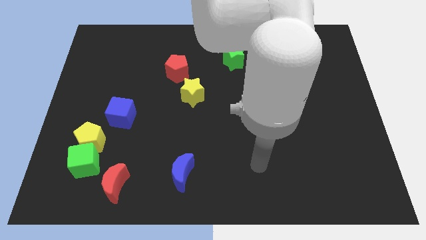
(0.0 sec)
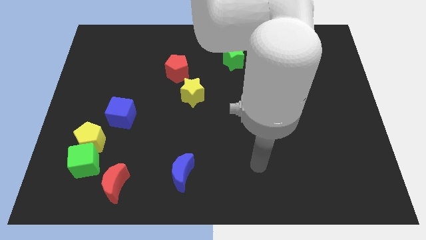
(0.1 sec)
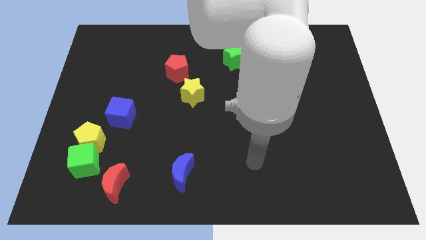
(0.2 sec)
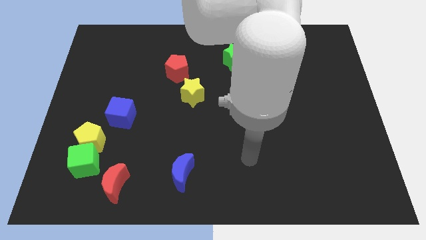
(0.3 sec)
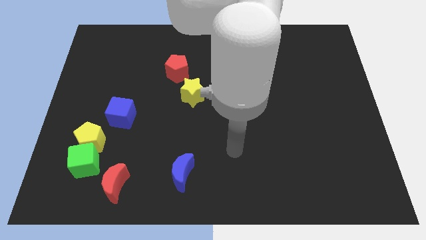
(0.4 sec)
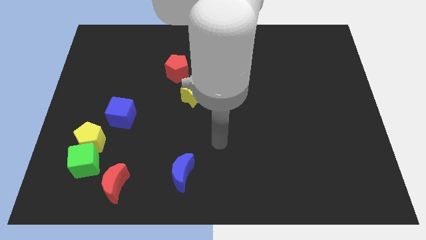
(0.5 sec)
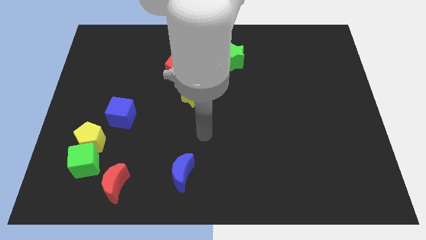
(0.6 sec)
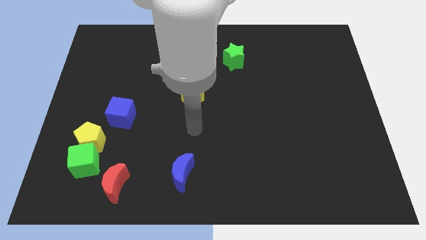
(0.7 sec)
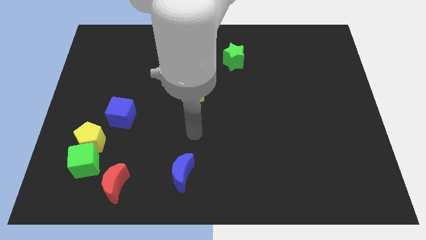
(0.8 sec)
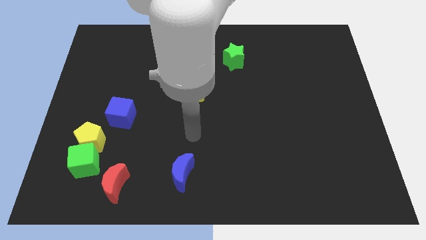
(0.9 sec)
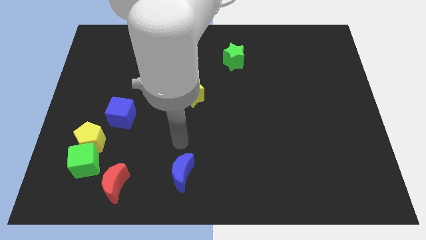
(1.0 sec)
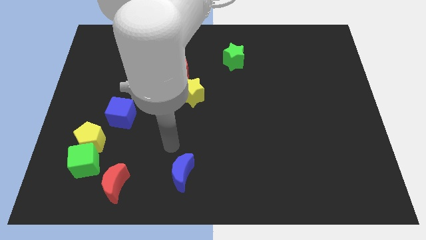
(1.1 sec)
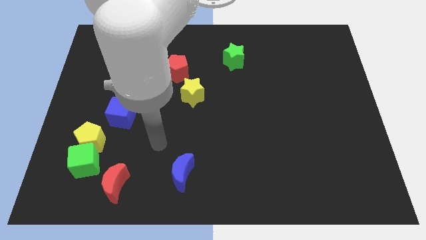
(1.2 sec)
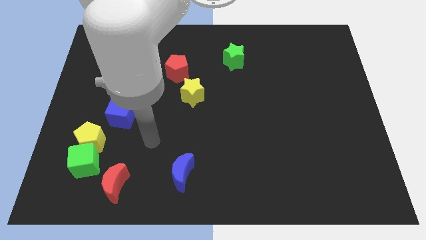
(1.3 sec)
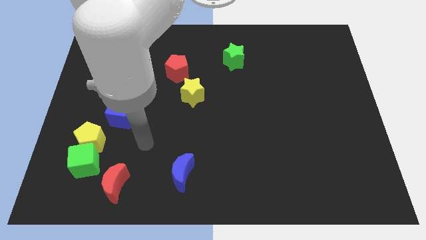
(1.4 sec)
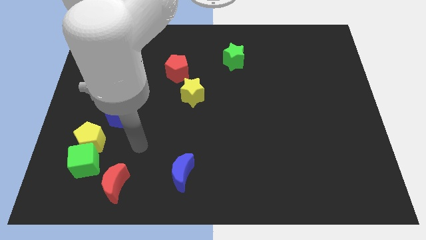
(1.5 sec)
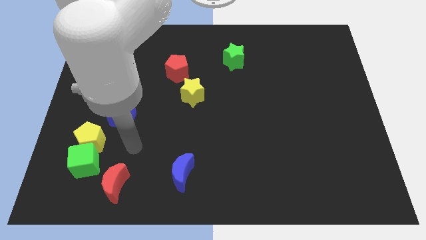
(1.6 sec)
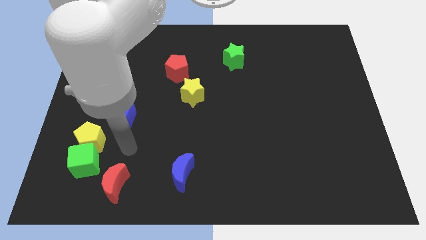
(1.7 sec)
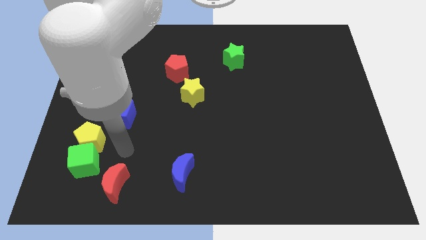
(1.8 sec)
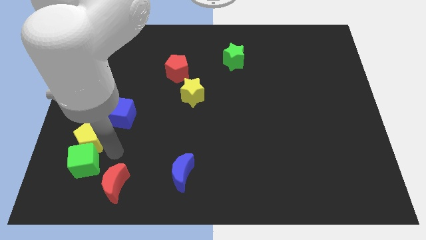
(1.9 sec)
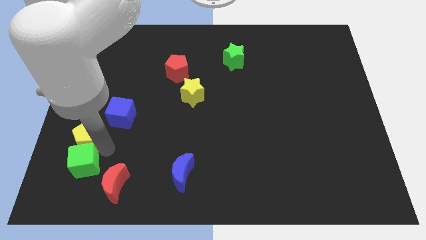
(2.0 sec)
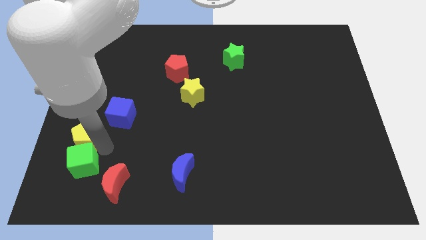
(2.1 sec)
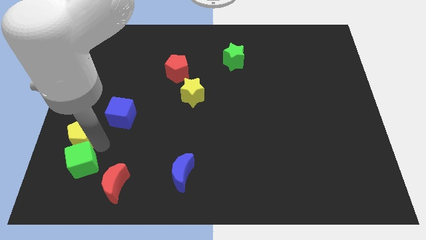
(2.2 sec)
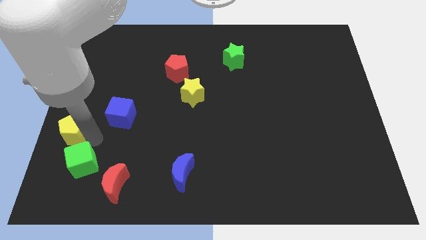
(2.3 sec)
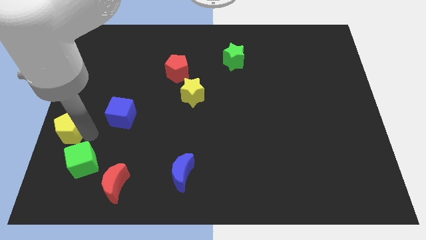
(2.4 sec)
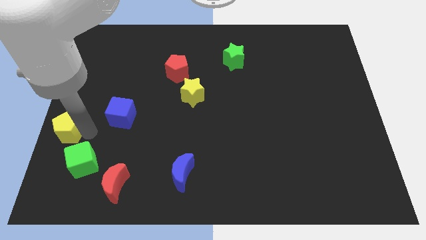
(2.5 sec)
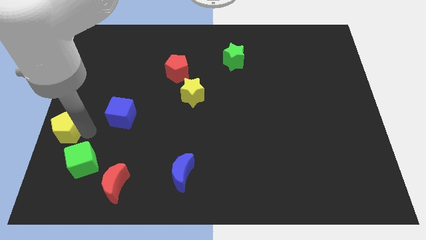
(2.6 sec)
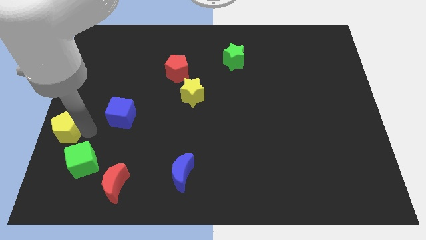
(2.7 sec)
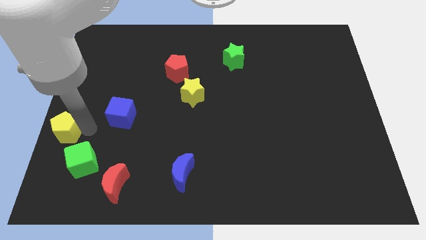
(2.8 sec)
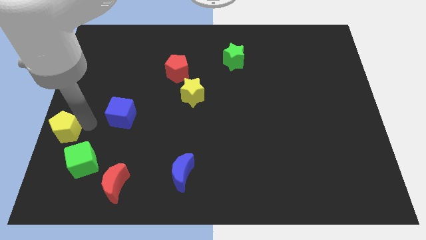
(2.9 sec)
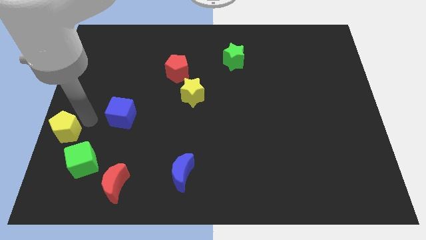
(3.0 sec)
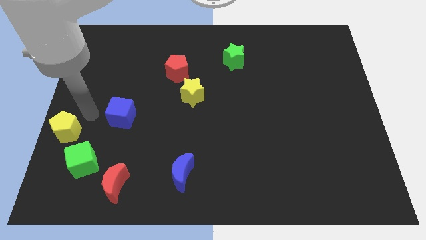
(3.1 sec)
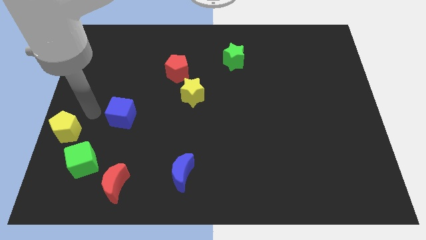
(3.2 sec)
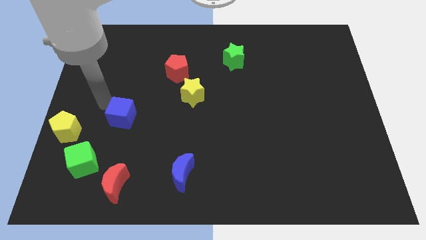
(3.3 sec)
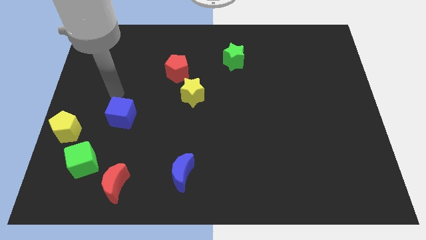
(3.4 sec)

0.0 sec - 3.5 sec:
place the arm above the blue cube

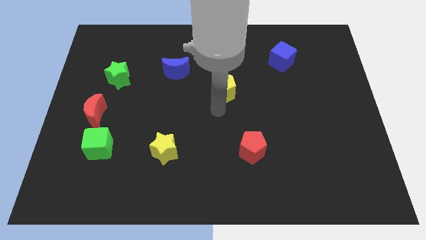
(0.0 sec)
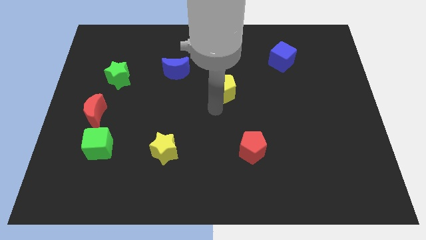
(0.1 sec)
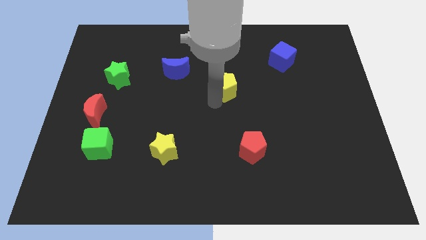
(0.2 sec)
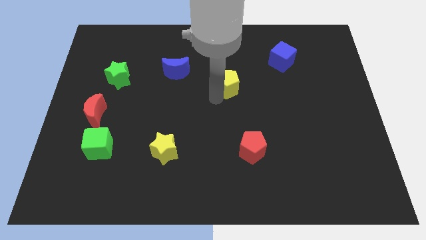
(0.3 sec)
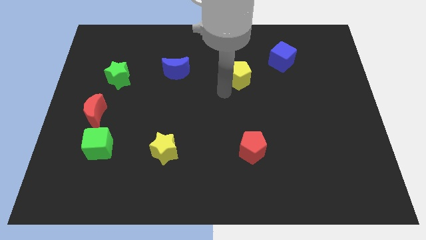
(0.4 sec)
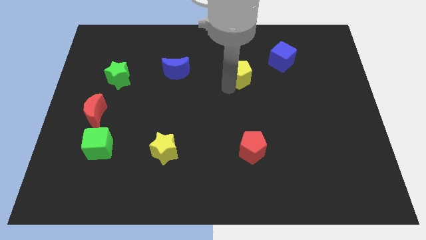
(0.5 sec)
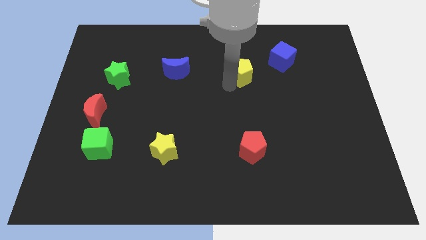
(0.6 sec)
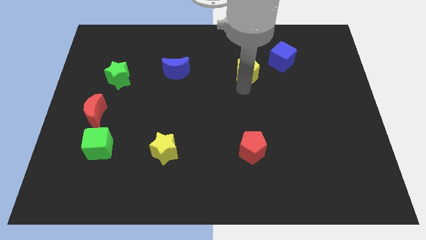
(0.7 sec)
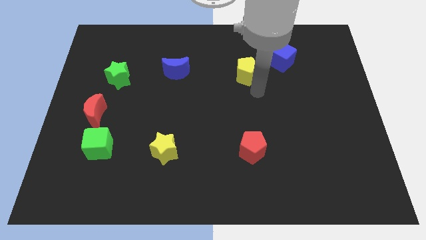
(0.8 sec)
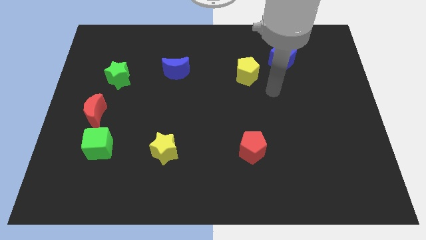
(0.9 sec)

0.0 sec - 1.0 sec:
push yellow pentagon slightly to the top of the board

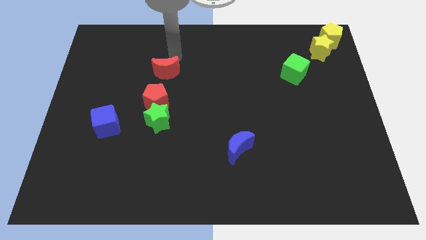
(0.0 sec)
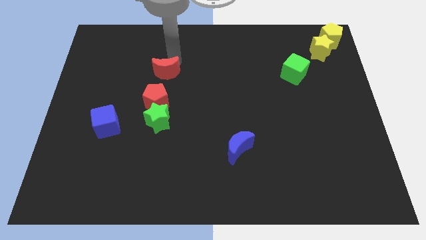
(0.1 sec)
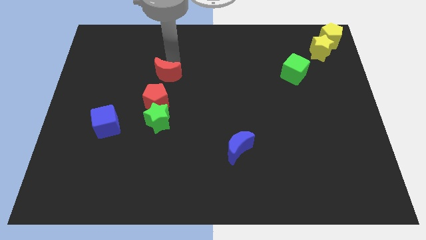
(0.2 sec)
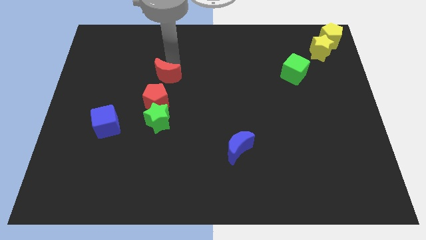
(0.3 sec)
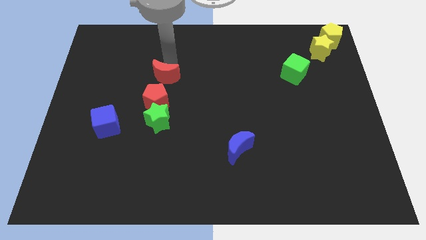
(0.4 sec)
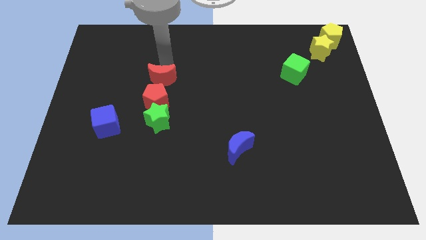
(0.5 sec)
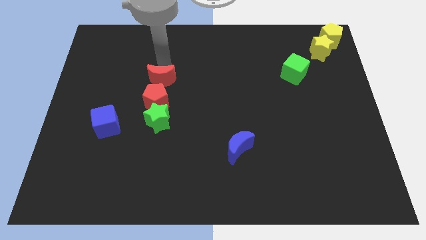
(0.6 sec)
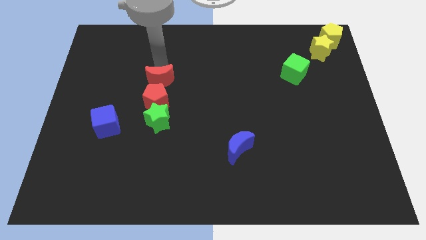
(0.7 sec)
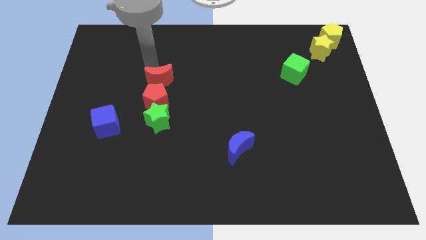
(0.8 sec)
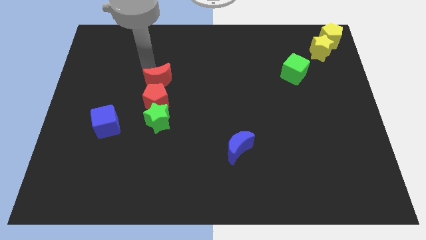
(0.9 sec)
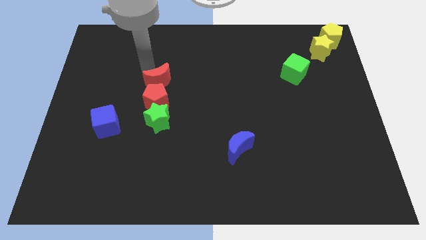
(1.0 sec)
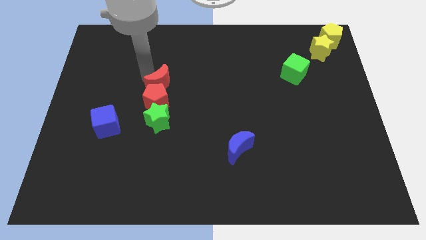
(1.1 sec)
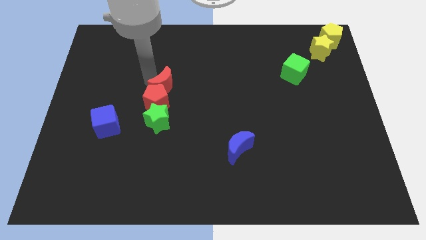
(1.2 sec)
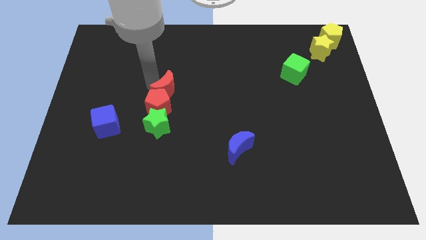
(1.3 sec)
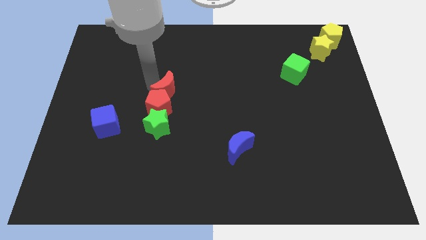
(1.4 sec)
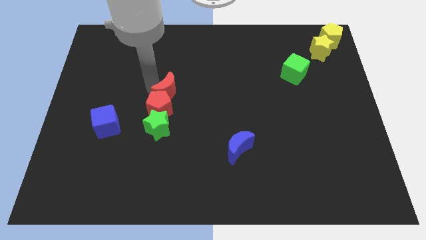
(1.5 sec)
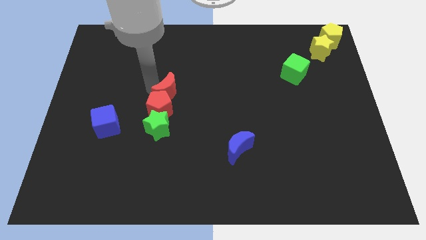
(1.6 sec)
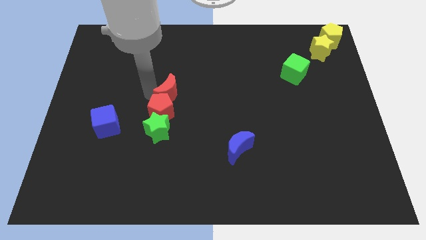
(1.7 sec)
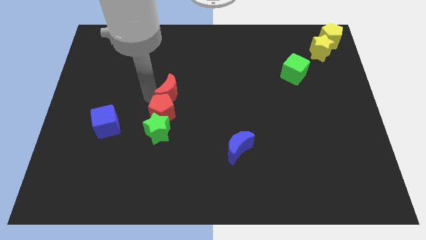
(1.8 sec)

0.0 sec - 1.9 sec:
slide red moon into the red pentagon

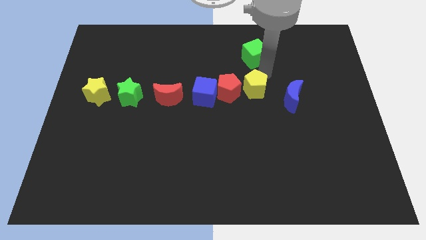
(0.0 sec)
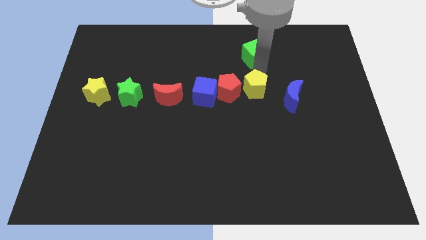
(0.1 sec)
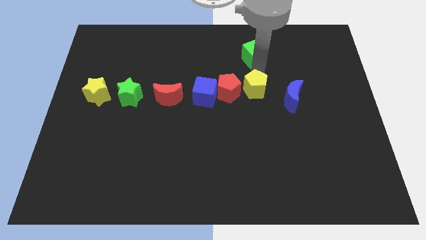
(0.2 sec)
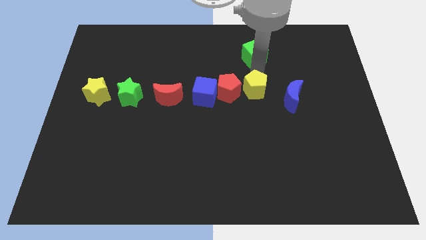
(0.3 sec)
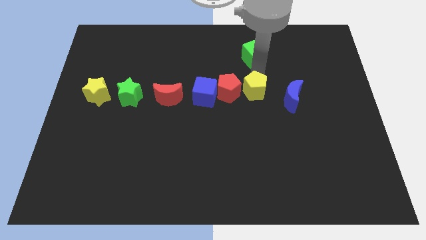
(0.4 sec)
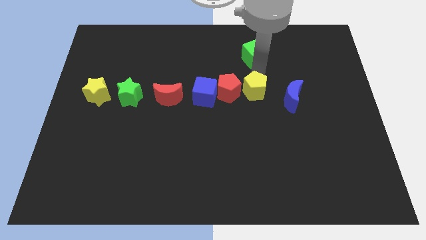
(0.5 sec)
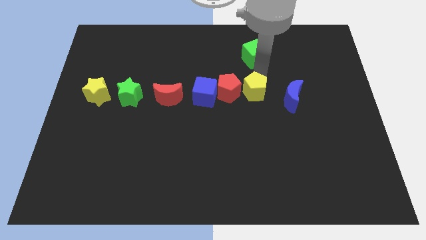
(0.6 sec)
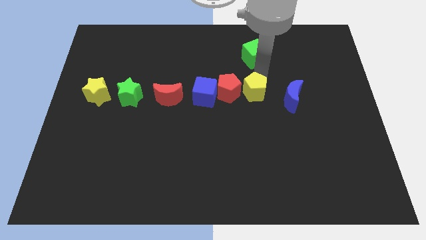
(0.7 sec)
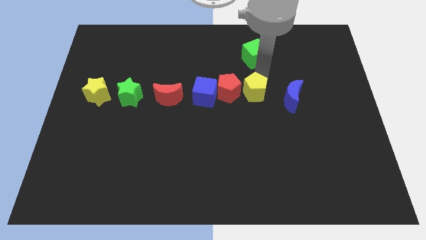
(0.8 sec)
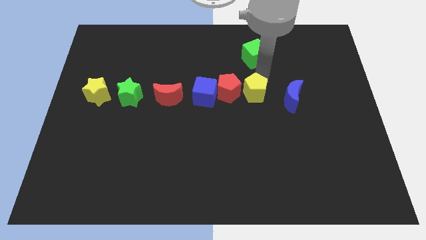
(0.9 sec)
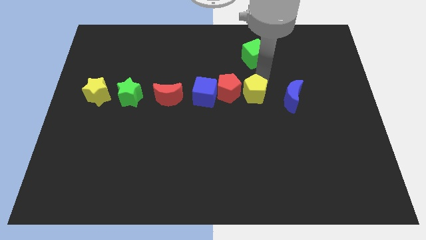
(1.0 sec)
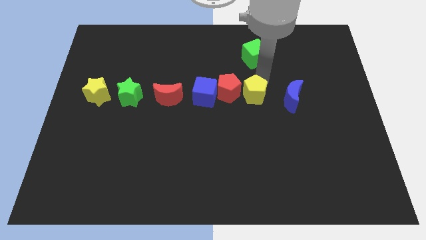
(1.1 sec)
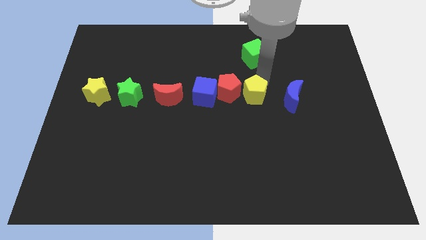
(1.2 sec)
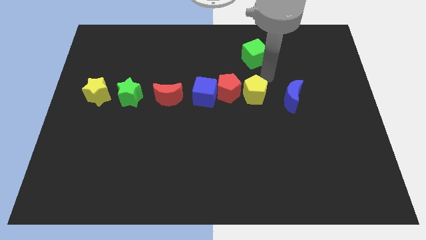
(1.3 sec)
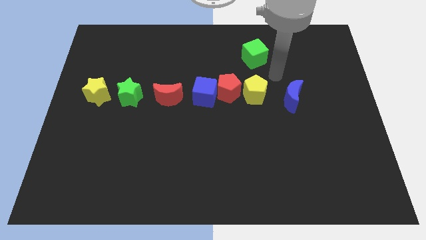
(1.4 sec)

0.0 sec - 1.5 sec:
place yellow pentagon beside red pentagon

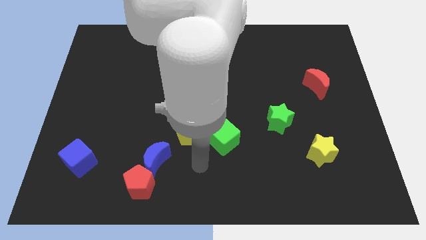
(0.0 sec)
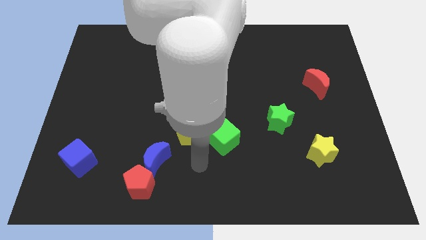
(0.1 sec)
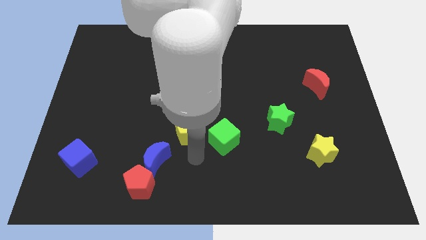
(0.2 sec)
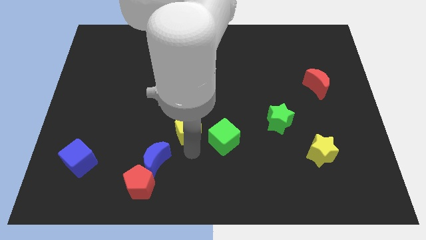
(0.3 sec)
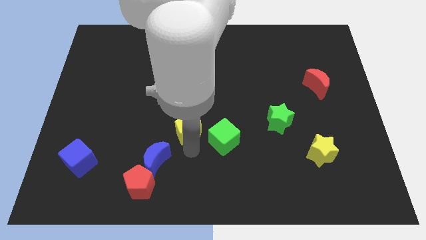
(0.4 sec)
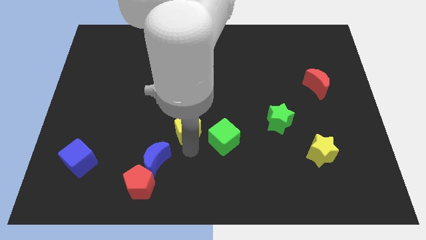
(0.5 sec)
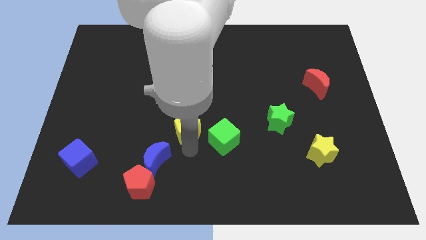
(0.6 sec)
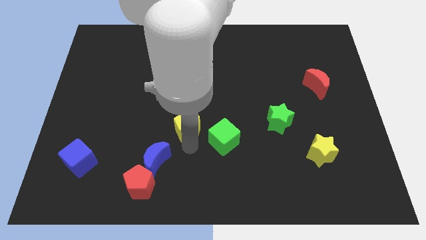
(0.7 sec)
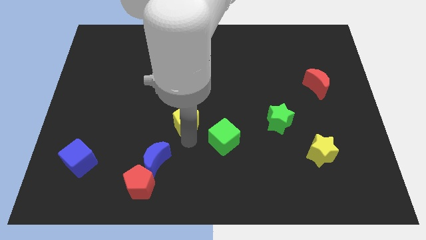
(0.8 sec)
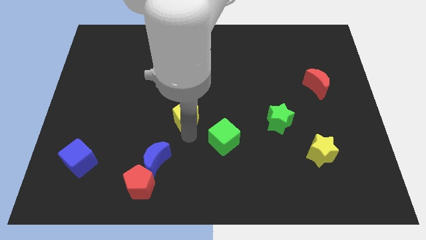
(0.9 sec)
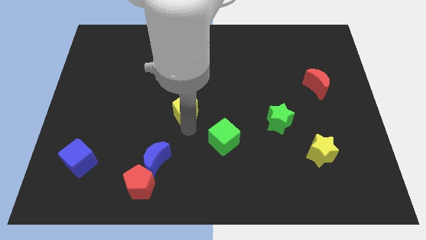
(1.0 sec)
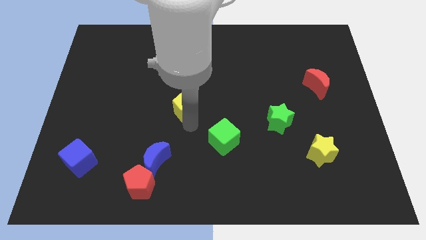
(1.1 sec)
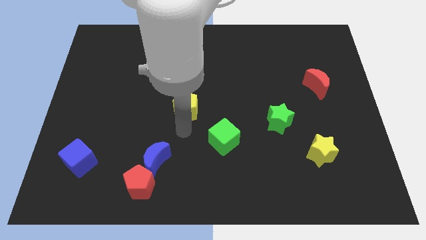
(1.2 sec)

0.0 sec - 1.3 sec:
move the yellow pentagon at the center
